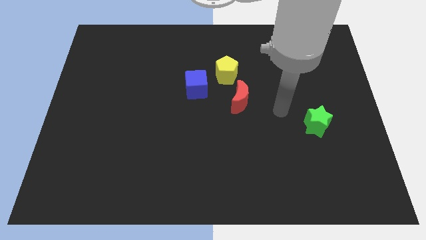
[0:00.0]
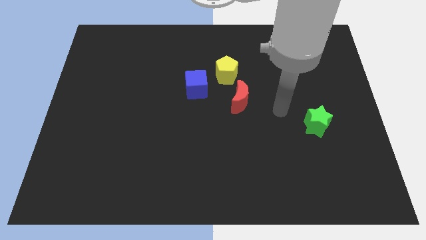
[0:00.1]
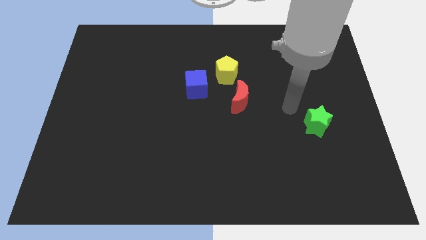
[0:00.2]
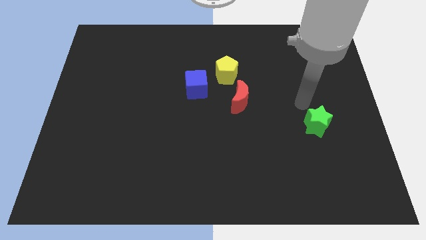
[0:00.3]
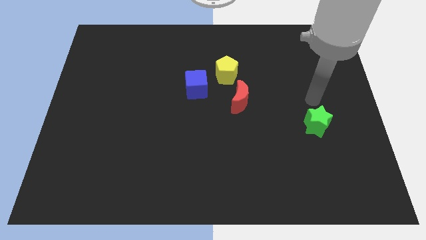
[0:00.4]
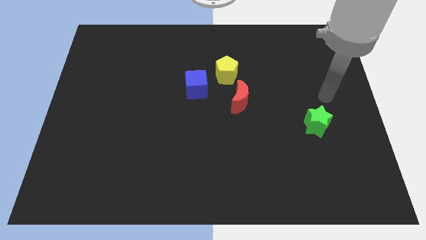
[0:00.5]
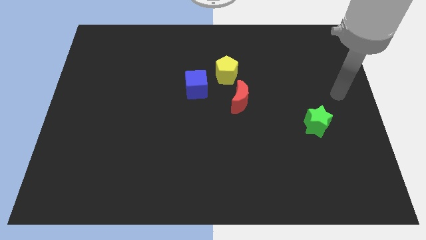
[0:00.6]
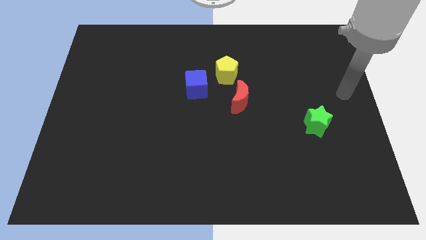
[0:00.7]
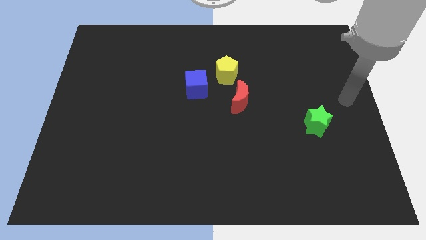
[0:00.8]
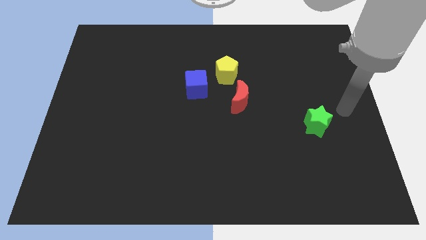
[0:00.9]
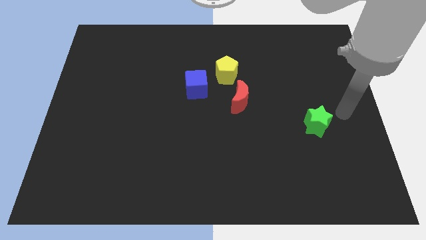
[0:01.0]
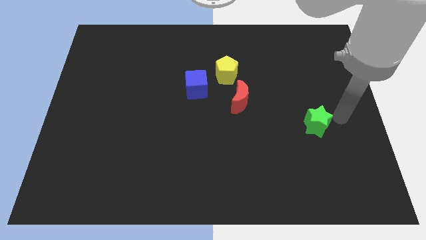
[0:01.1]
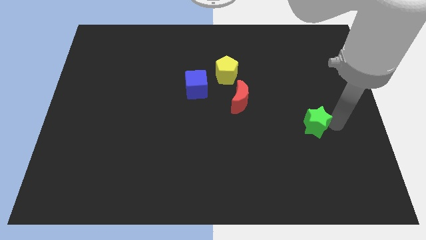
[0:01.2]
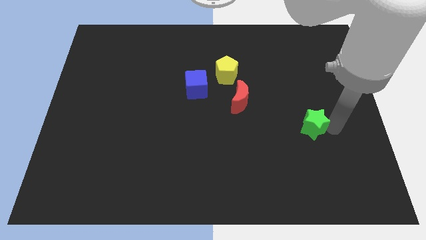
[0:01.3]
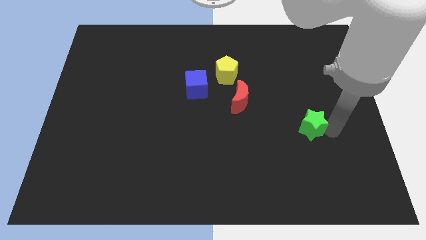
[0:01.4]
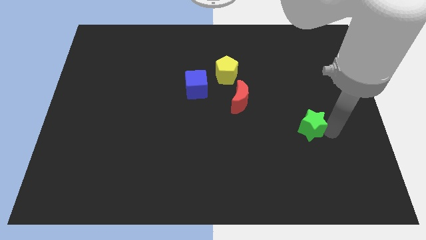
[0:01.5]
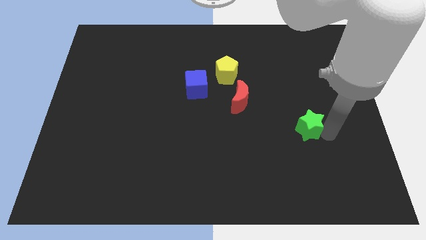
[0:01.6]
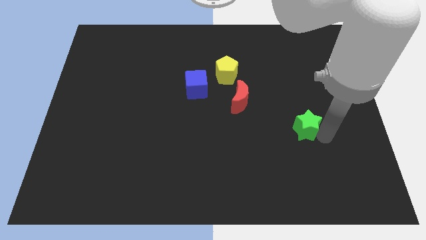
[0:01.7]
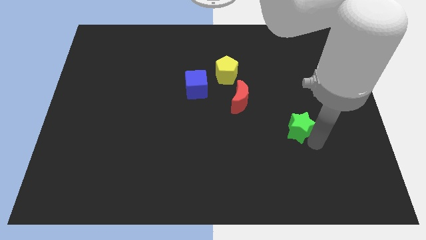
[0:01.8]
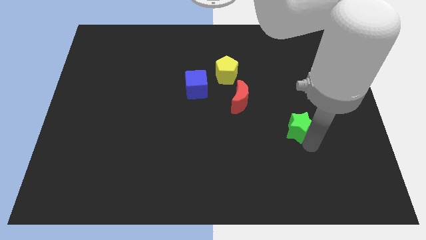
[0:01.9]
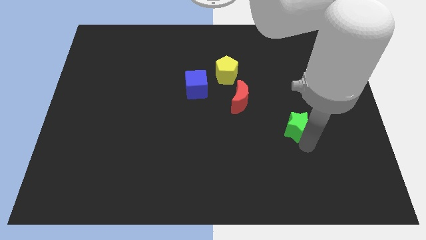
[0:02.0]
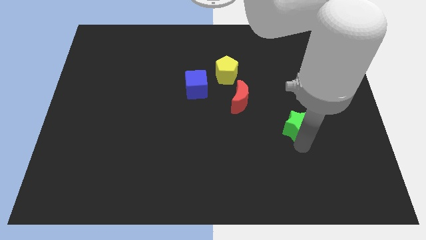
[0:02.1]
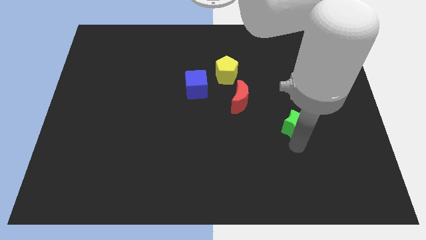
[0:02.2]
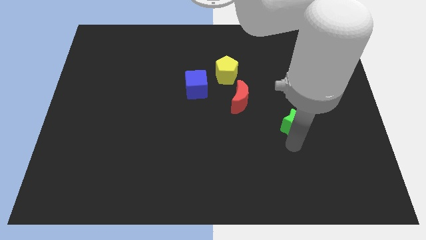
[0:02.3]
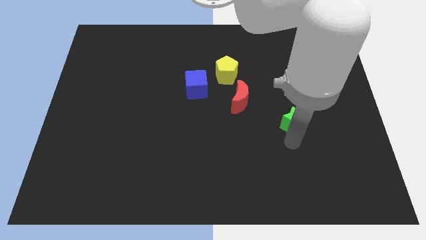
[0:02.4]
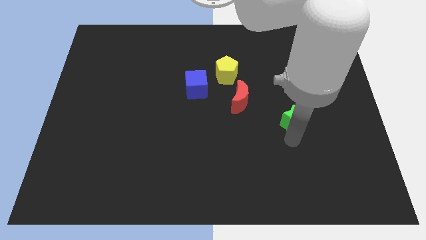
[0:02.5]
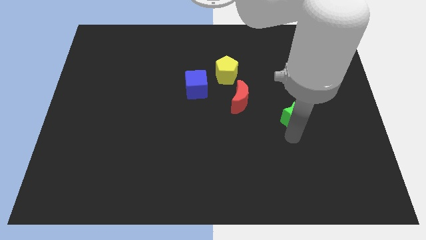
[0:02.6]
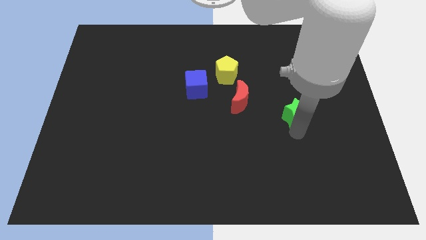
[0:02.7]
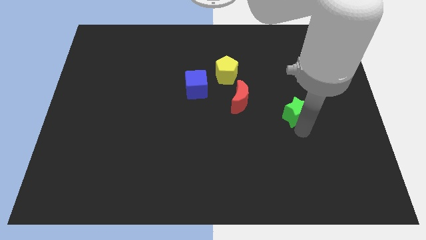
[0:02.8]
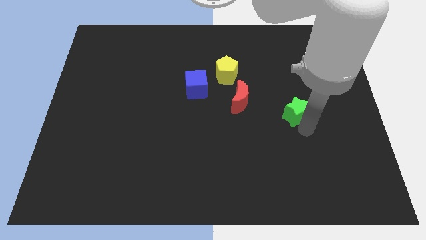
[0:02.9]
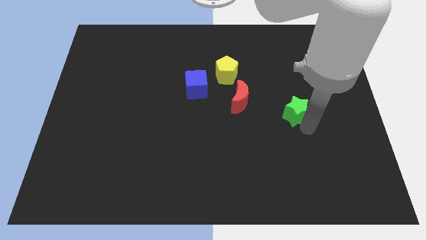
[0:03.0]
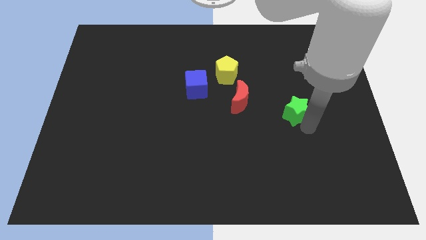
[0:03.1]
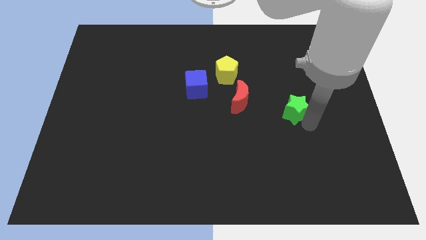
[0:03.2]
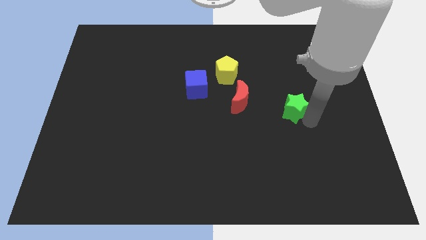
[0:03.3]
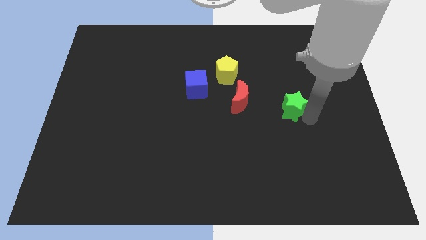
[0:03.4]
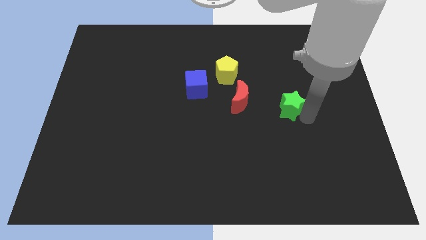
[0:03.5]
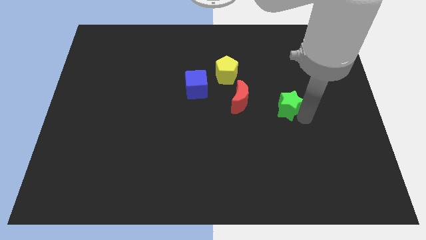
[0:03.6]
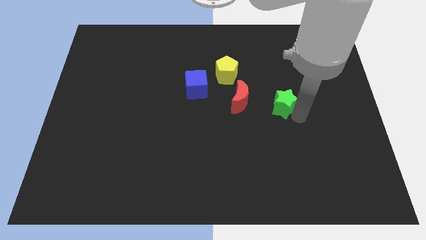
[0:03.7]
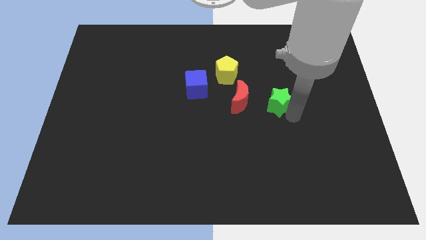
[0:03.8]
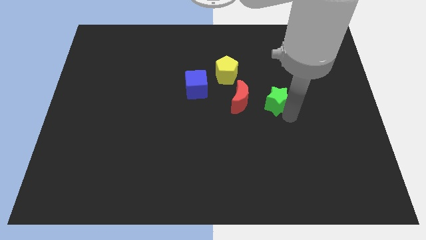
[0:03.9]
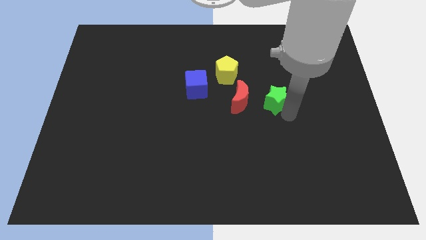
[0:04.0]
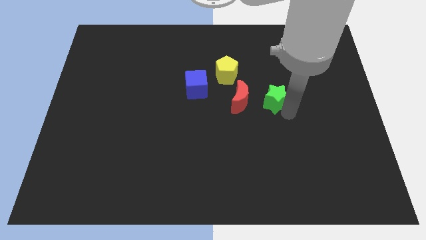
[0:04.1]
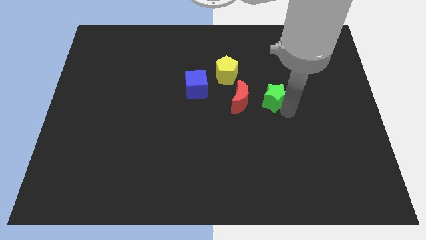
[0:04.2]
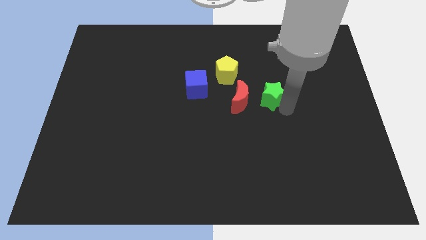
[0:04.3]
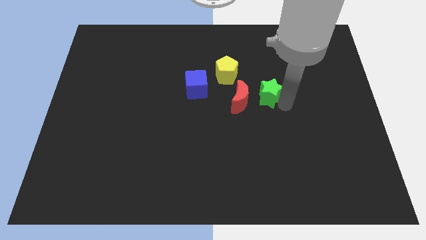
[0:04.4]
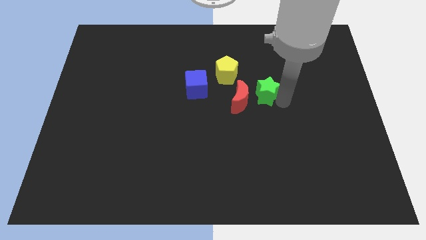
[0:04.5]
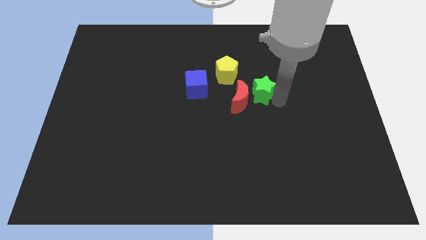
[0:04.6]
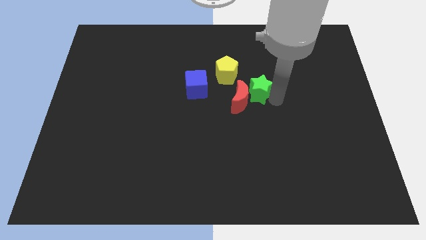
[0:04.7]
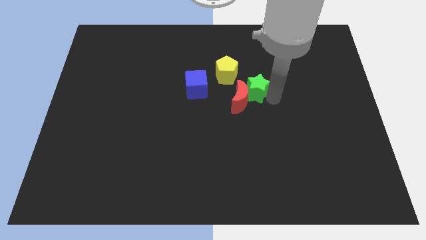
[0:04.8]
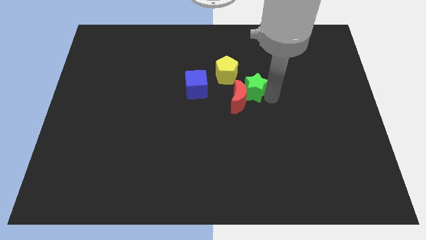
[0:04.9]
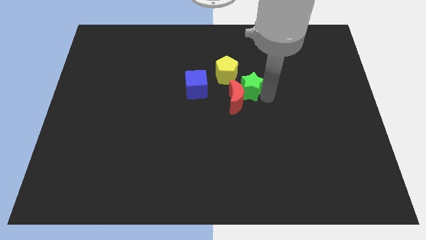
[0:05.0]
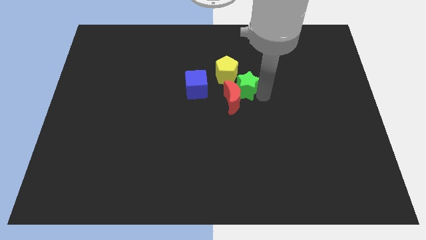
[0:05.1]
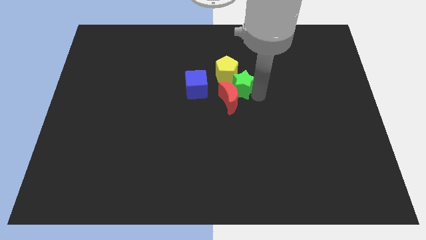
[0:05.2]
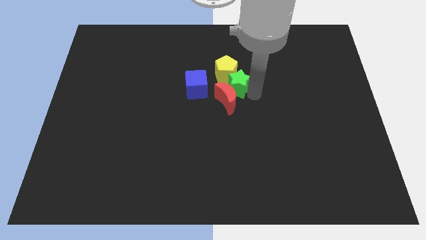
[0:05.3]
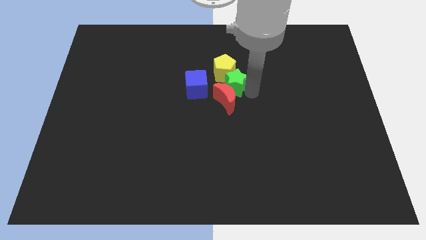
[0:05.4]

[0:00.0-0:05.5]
slide the green block to the yellow pentagon

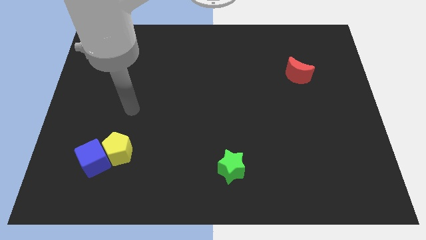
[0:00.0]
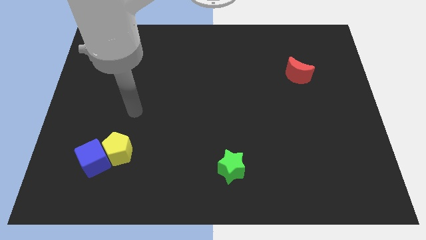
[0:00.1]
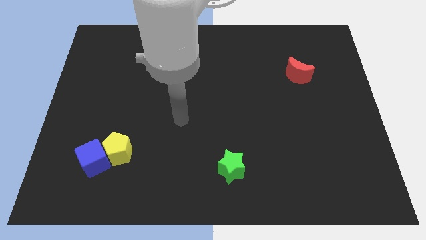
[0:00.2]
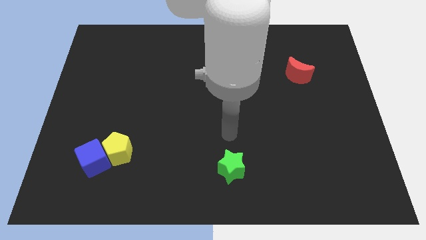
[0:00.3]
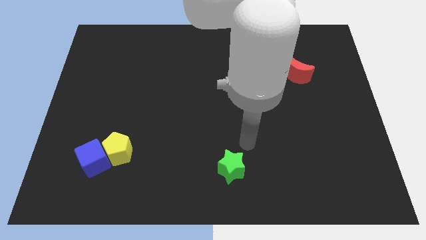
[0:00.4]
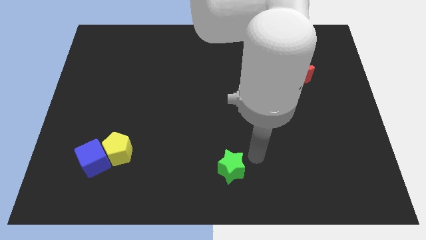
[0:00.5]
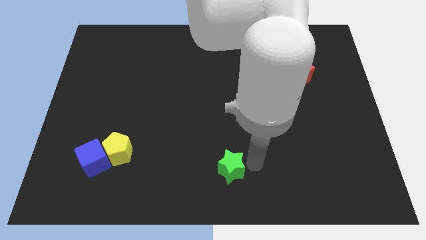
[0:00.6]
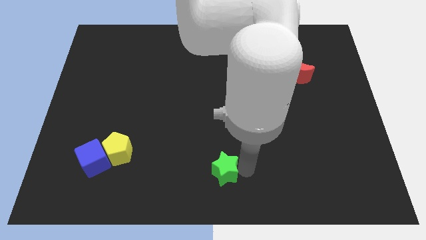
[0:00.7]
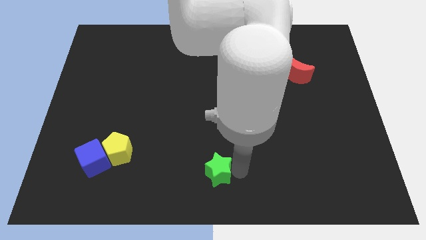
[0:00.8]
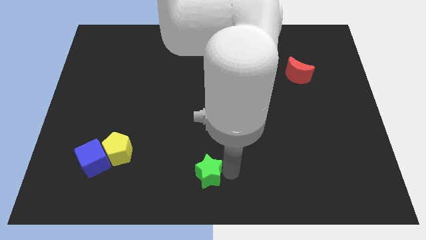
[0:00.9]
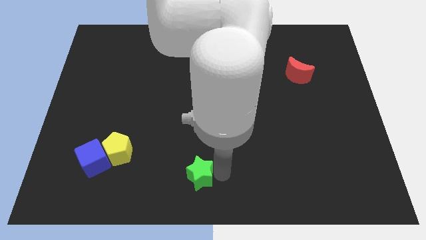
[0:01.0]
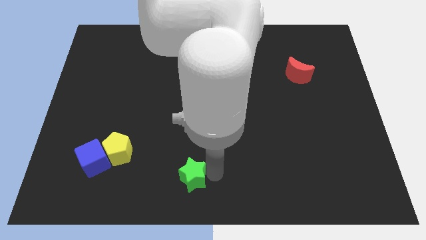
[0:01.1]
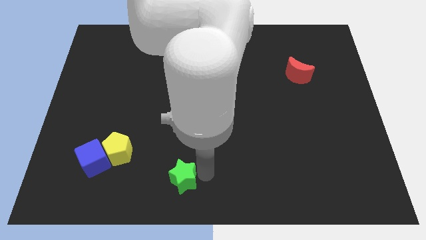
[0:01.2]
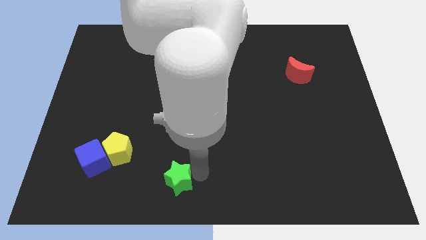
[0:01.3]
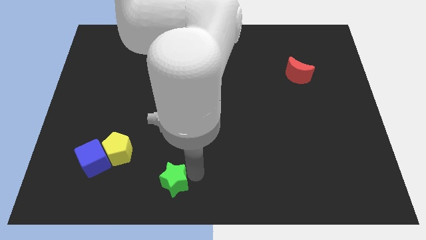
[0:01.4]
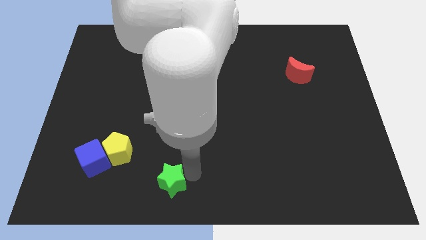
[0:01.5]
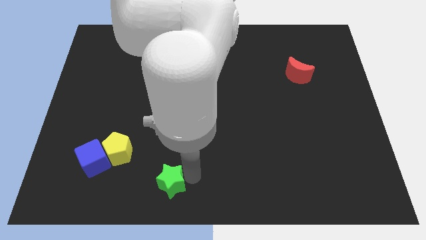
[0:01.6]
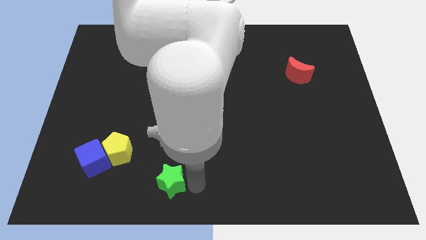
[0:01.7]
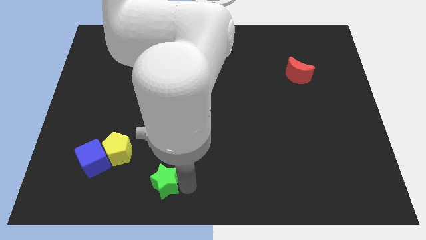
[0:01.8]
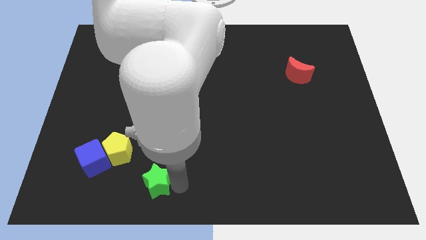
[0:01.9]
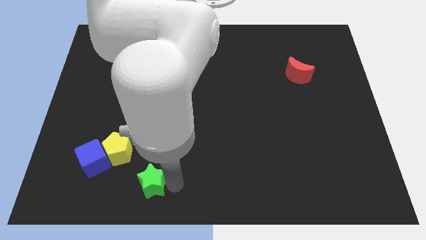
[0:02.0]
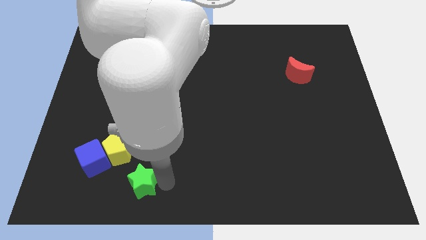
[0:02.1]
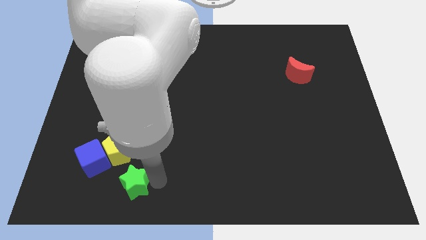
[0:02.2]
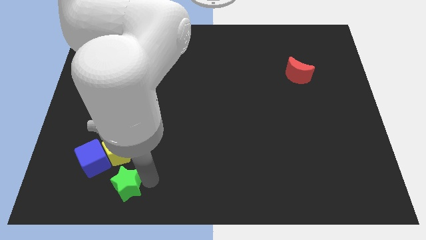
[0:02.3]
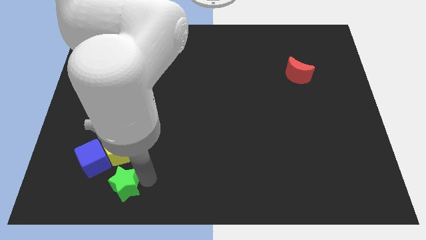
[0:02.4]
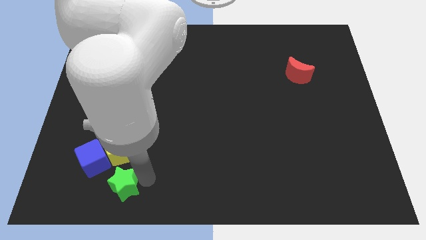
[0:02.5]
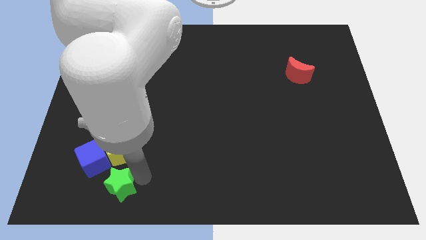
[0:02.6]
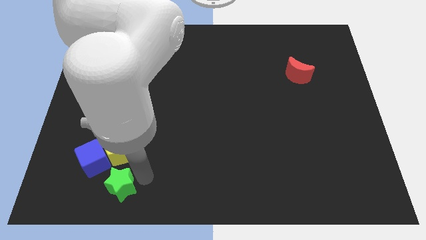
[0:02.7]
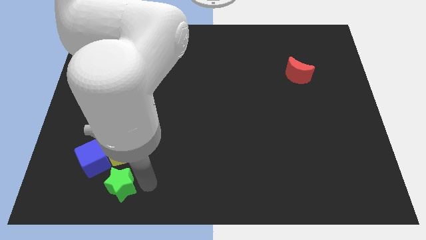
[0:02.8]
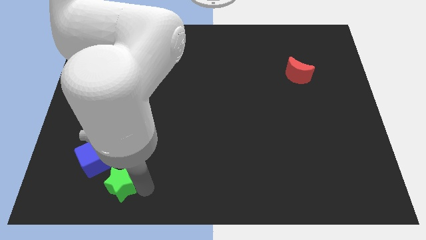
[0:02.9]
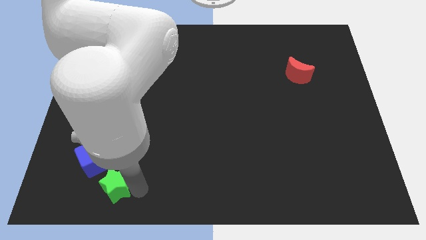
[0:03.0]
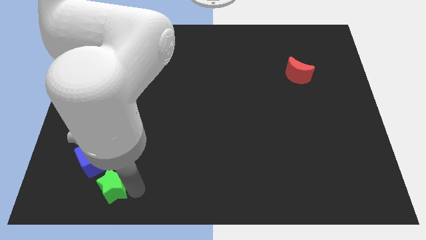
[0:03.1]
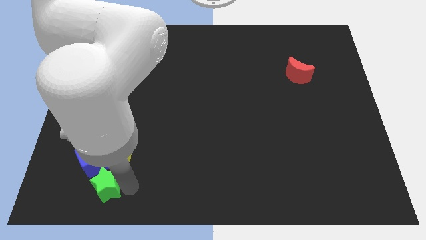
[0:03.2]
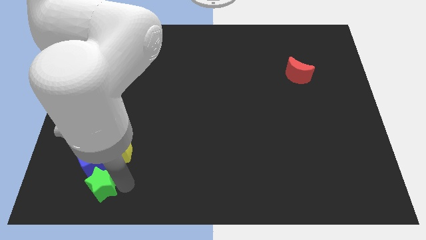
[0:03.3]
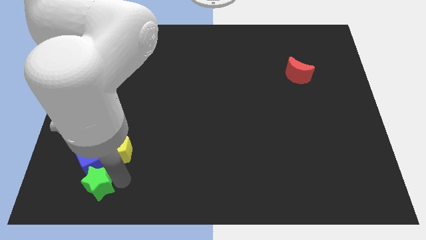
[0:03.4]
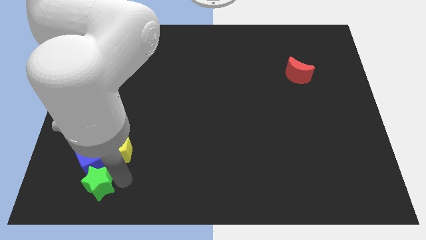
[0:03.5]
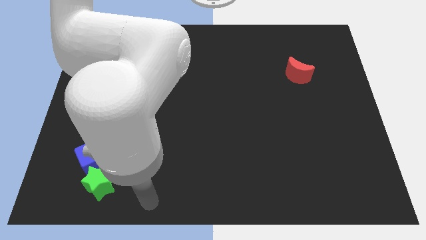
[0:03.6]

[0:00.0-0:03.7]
slide the green block to the blue cube
